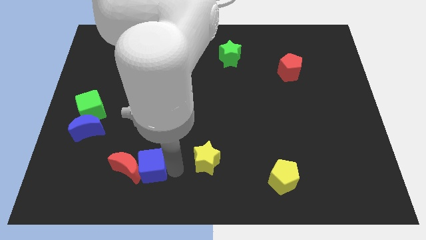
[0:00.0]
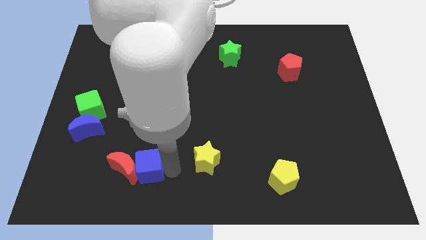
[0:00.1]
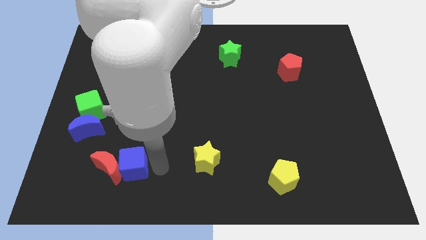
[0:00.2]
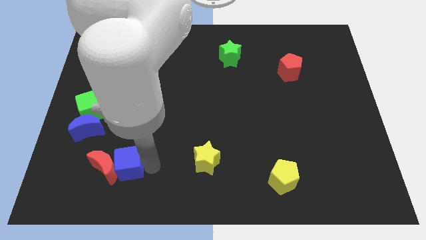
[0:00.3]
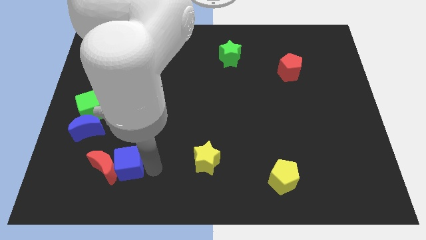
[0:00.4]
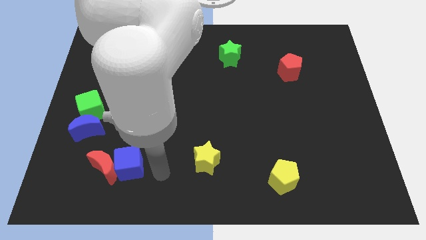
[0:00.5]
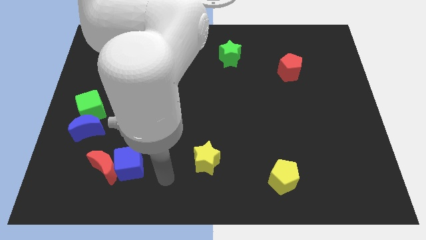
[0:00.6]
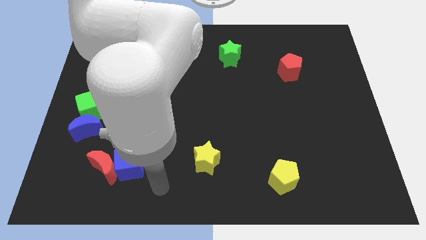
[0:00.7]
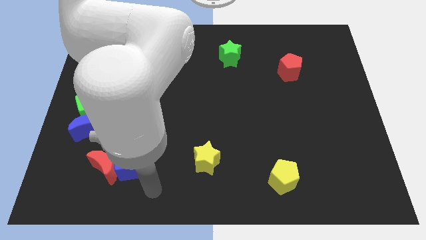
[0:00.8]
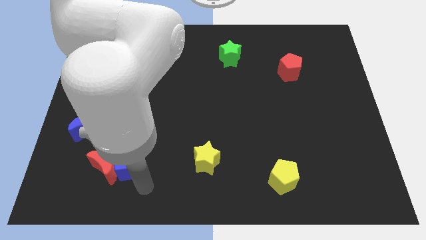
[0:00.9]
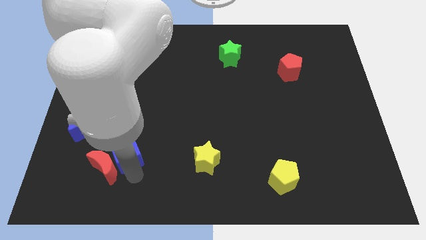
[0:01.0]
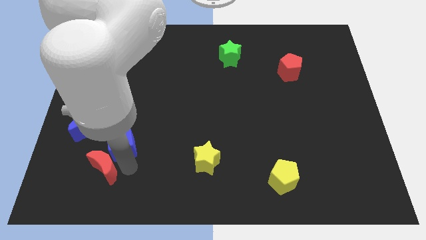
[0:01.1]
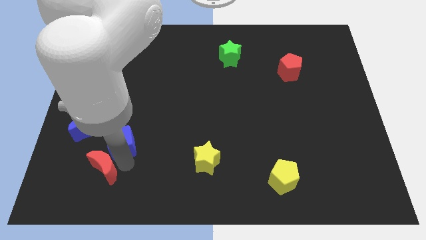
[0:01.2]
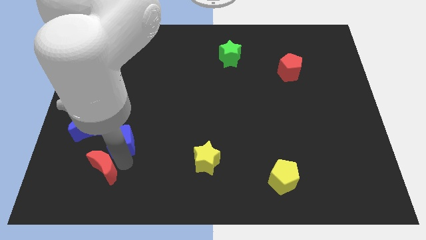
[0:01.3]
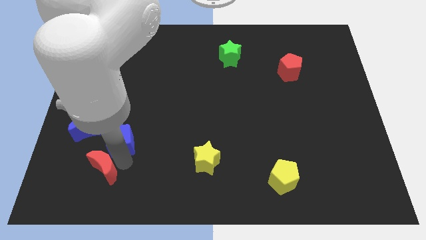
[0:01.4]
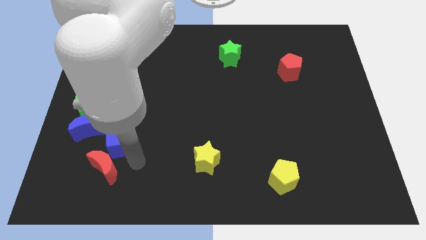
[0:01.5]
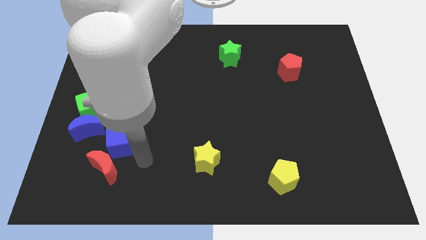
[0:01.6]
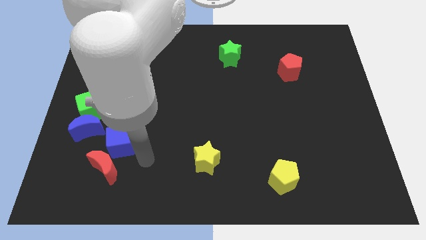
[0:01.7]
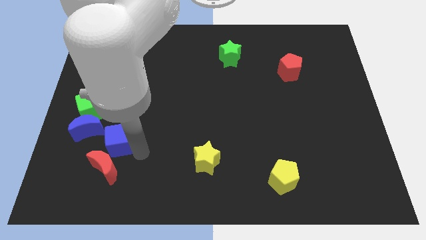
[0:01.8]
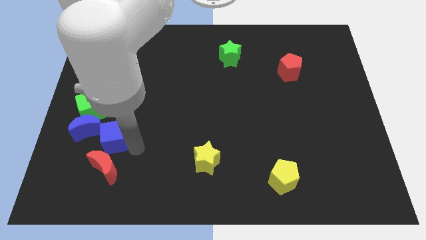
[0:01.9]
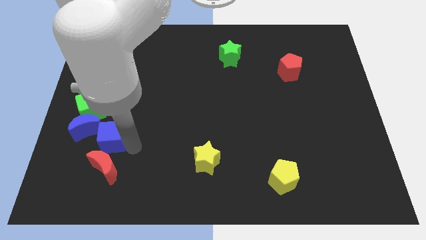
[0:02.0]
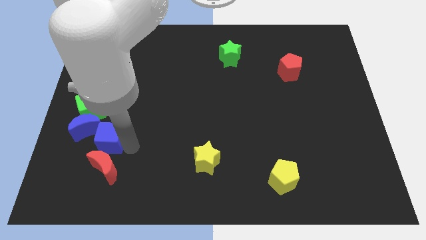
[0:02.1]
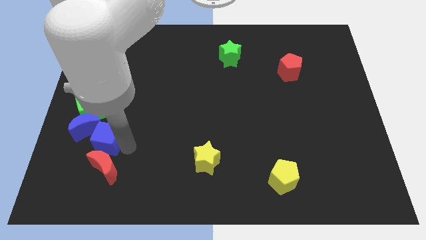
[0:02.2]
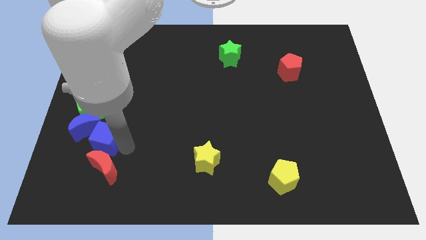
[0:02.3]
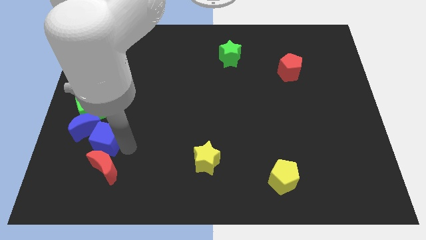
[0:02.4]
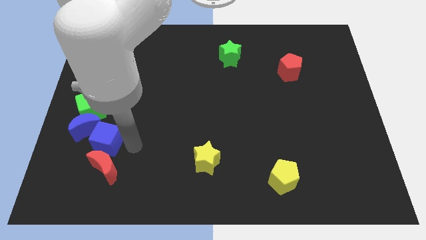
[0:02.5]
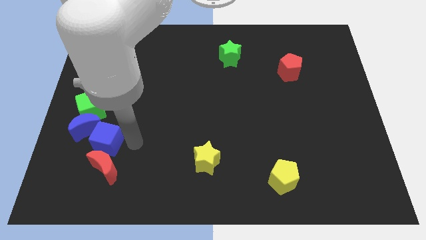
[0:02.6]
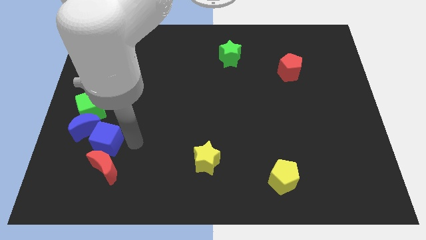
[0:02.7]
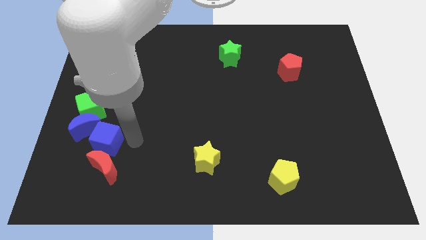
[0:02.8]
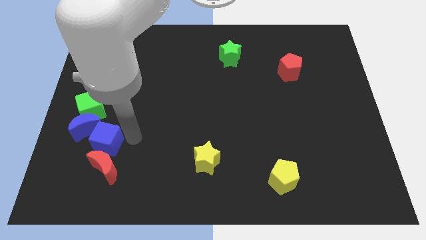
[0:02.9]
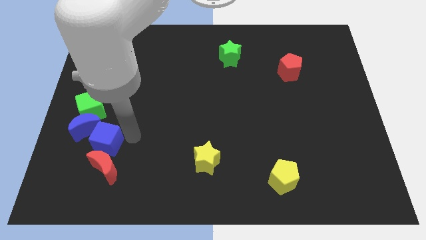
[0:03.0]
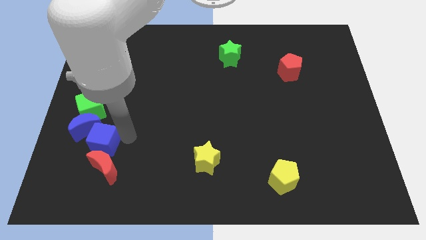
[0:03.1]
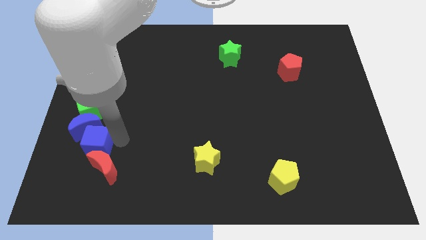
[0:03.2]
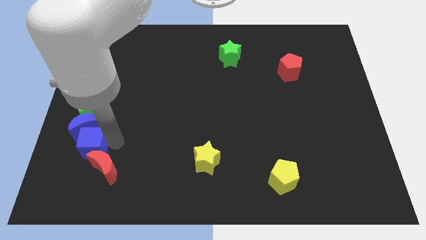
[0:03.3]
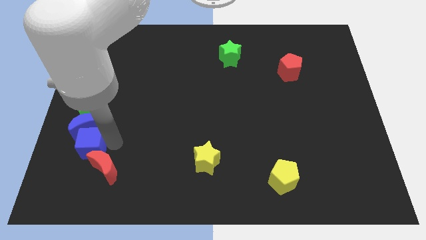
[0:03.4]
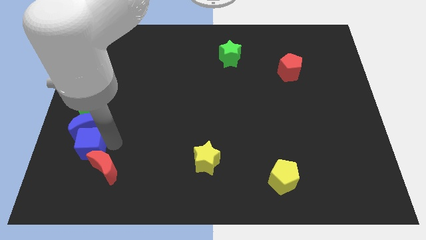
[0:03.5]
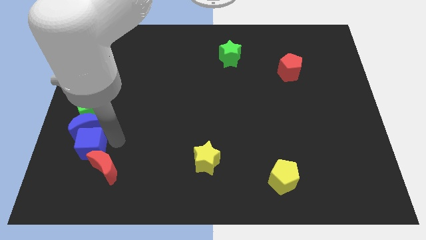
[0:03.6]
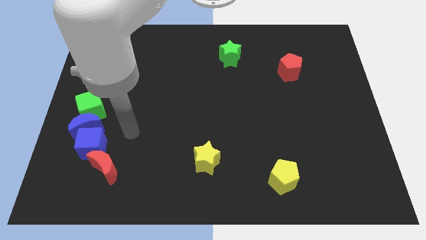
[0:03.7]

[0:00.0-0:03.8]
place the cube in between red moon and blue moon

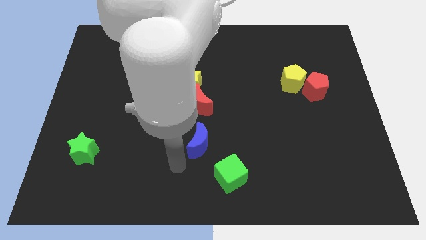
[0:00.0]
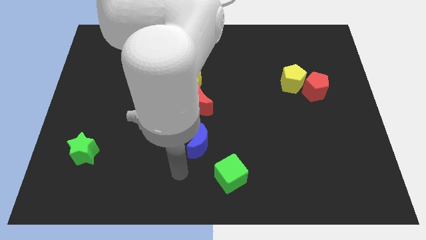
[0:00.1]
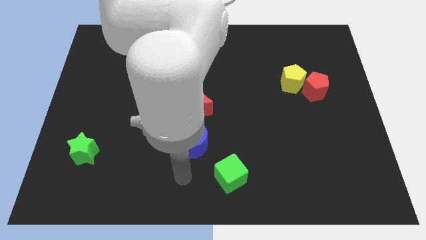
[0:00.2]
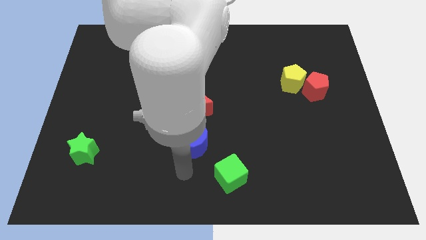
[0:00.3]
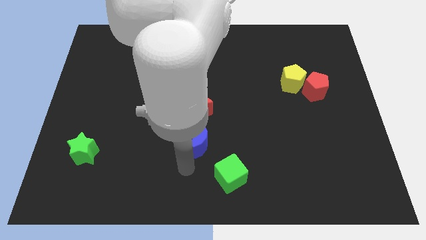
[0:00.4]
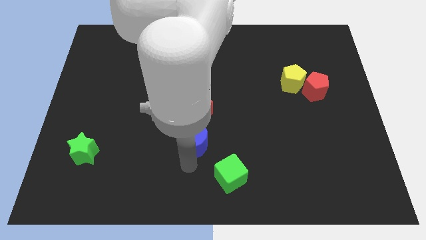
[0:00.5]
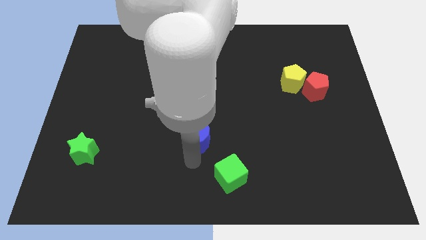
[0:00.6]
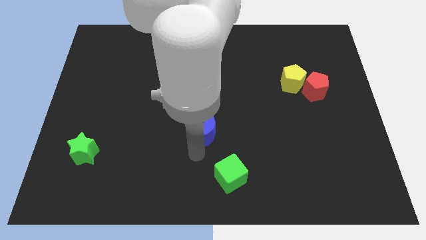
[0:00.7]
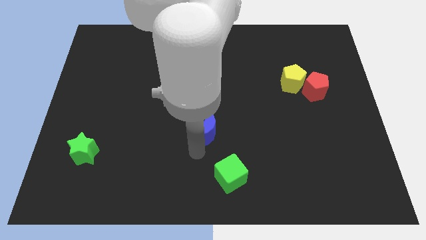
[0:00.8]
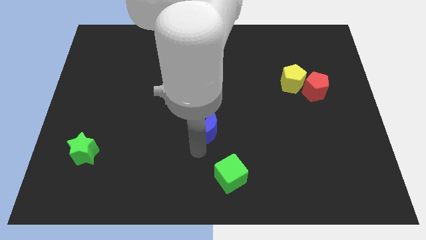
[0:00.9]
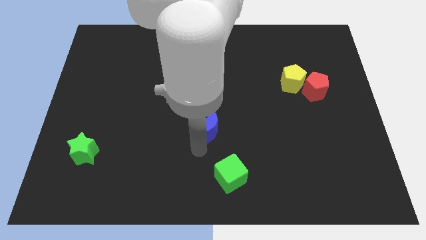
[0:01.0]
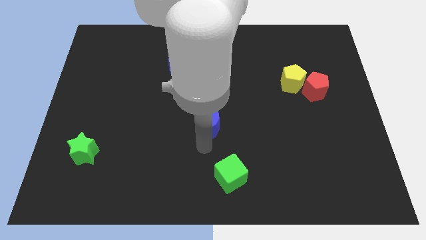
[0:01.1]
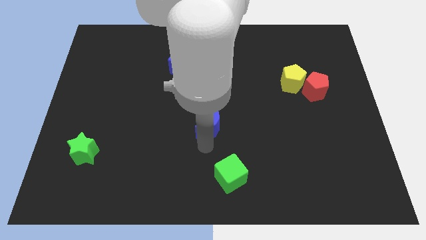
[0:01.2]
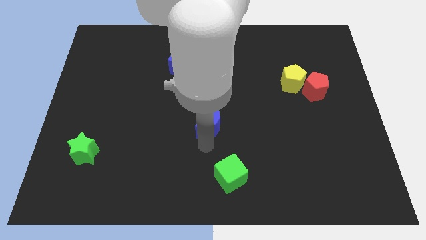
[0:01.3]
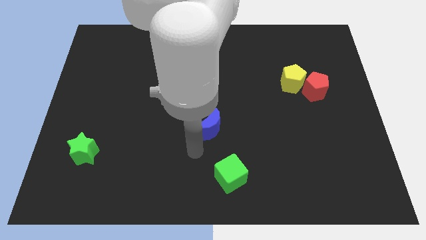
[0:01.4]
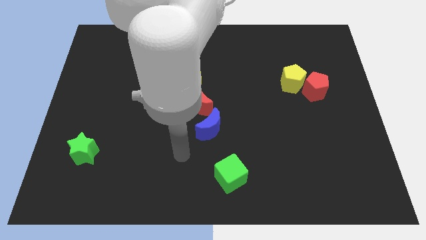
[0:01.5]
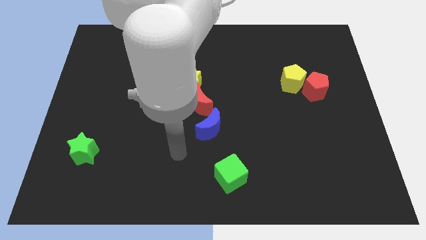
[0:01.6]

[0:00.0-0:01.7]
arrange the blue crescent at the bottom right of the red moon

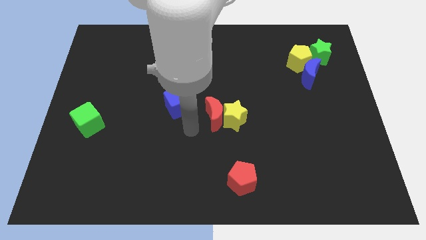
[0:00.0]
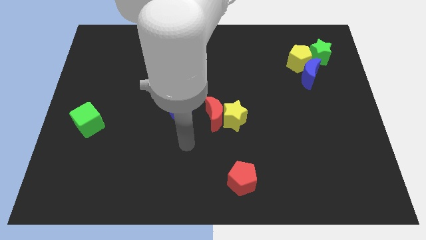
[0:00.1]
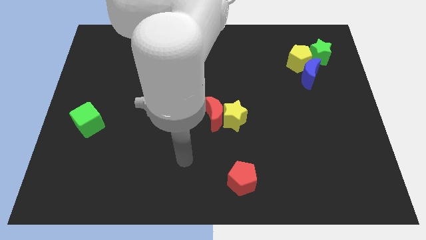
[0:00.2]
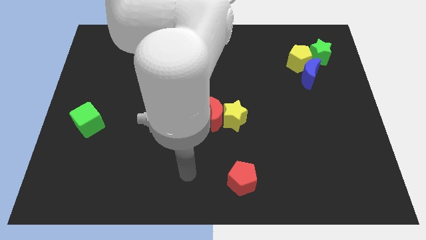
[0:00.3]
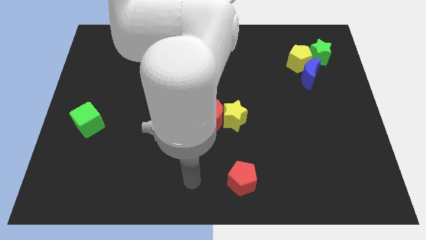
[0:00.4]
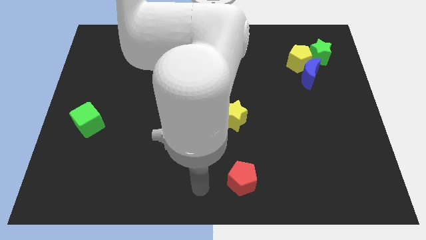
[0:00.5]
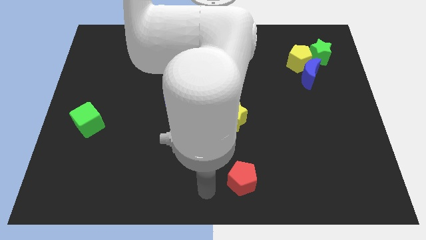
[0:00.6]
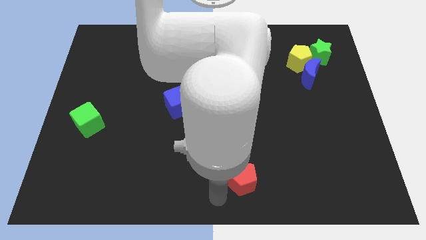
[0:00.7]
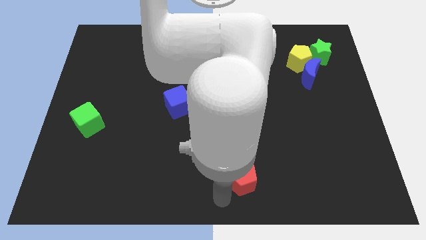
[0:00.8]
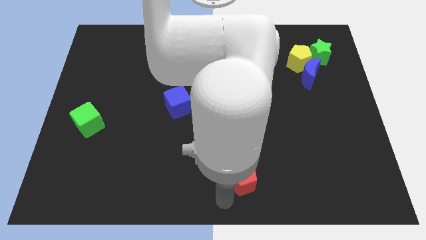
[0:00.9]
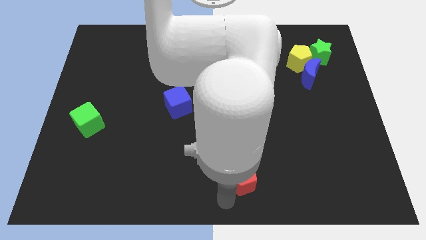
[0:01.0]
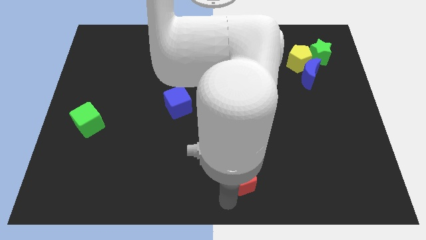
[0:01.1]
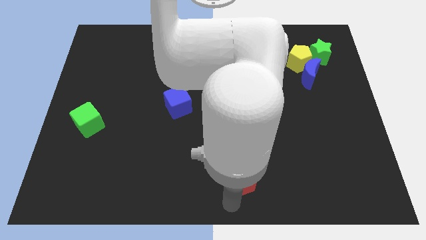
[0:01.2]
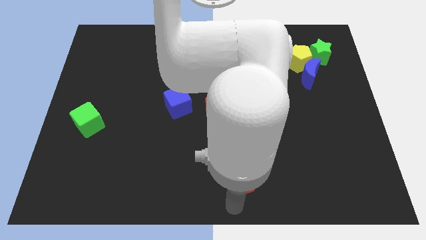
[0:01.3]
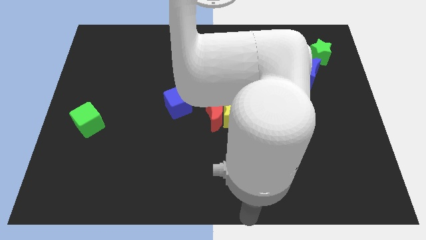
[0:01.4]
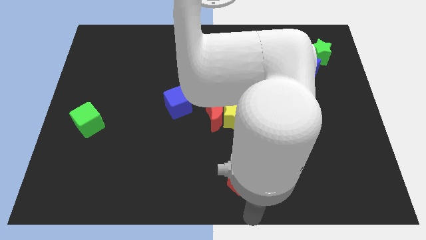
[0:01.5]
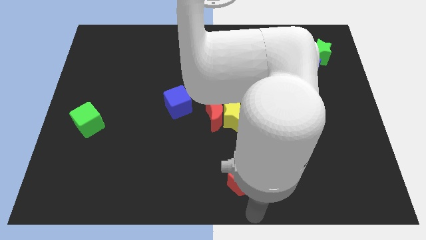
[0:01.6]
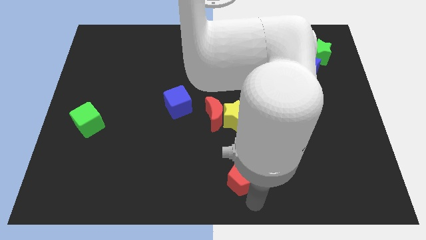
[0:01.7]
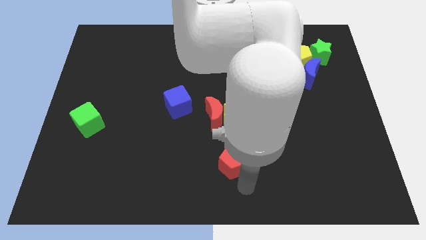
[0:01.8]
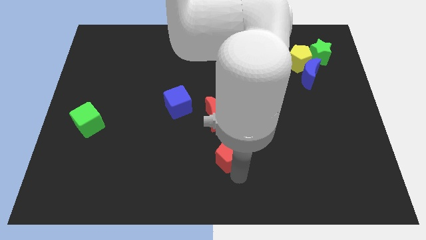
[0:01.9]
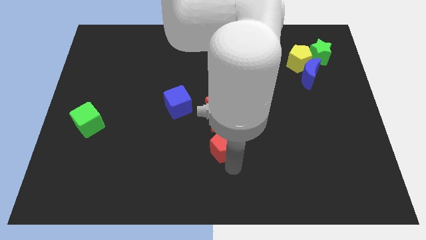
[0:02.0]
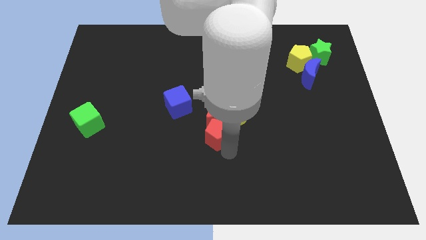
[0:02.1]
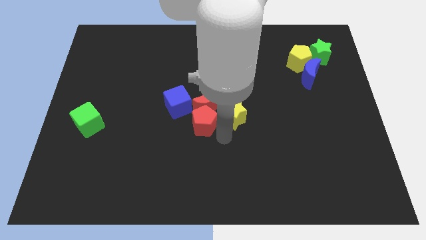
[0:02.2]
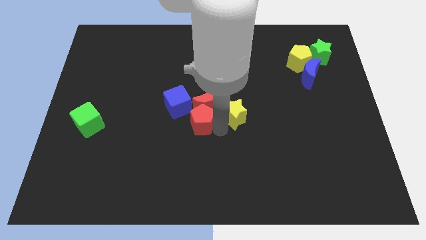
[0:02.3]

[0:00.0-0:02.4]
push red pentagon to red crescent

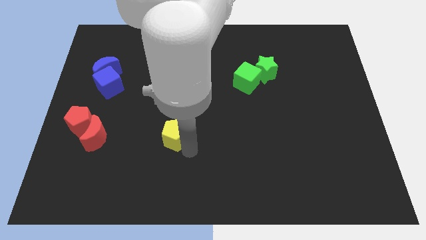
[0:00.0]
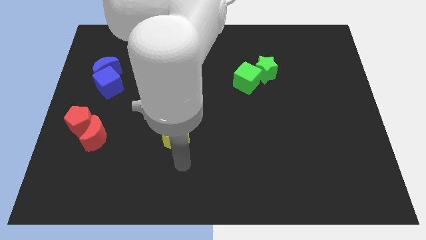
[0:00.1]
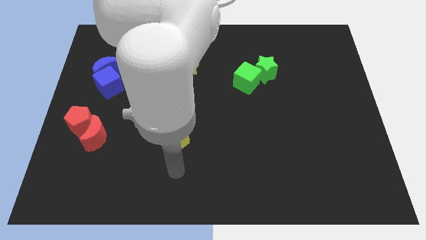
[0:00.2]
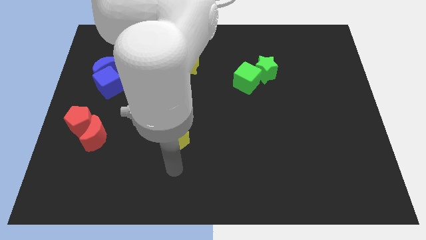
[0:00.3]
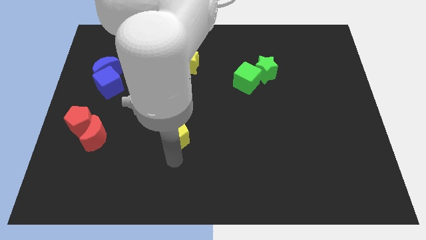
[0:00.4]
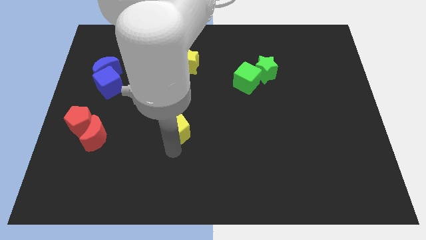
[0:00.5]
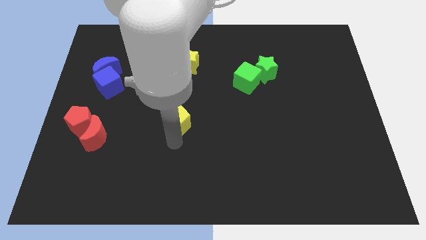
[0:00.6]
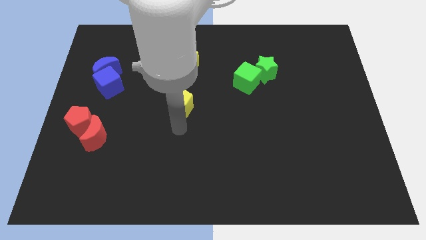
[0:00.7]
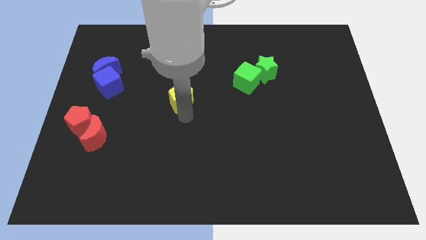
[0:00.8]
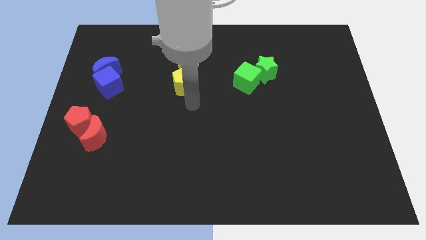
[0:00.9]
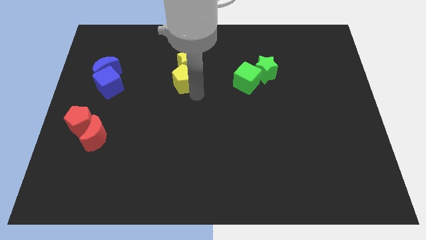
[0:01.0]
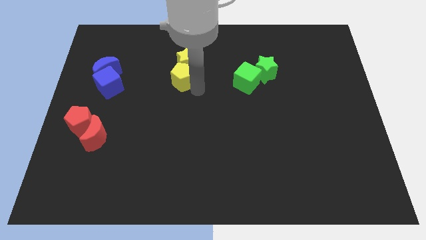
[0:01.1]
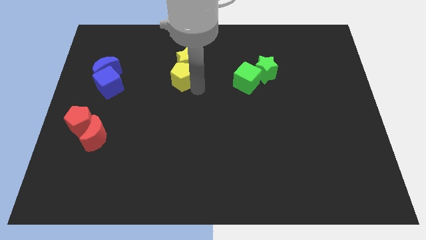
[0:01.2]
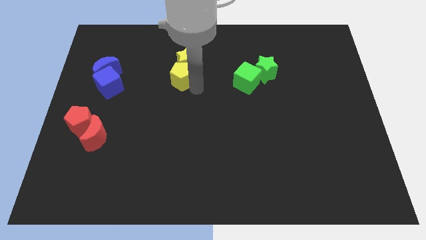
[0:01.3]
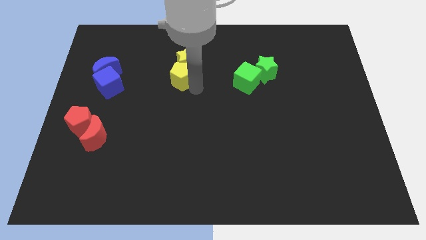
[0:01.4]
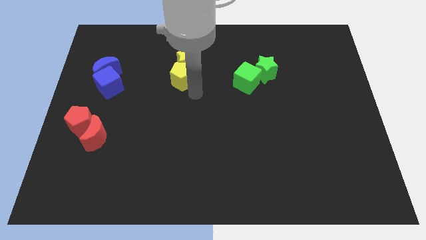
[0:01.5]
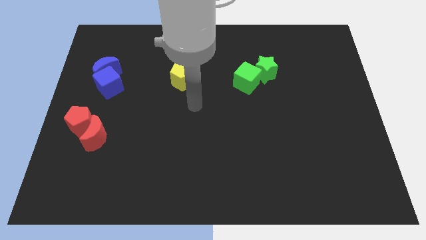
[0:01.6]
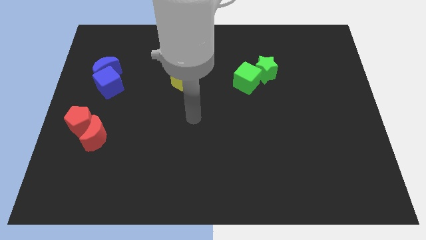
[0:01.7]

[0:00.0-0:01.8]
push the yellow pentagon into the yellow star
